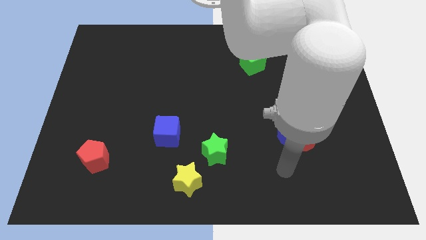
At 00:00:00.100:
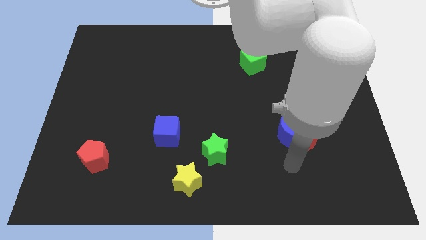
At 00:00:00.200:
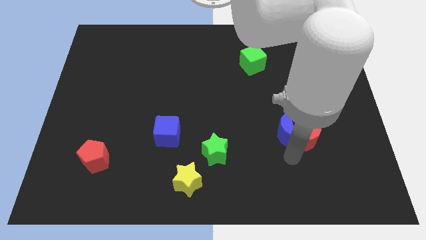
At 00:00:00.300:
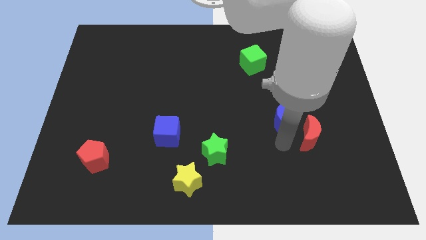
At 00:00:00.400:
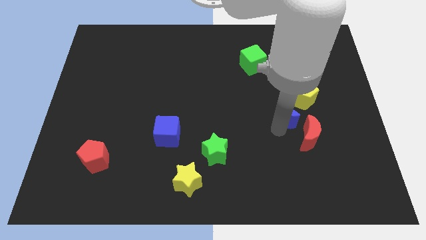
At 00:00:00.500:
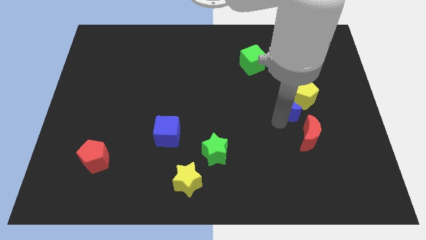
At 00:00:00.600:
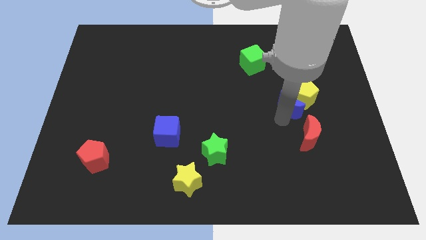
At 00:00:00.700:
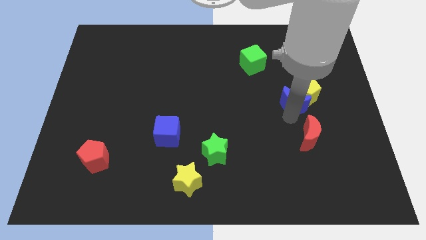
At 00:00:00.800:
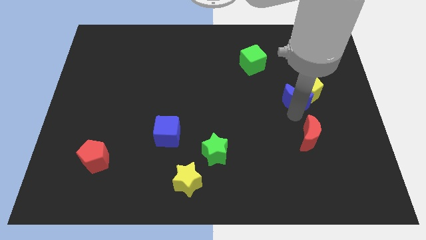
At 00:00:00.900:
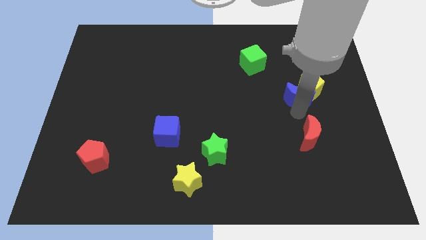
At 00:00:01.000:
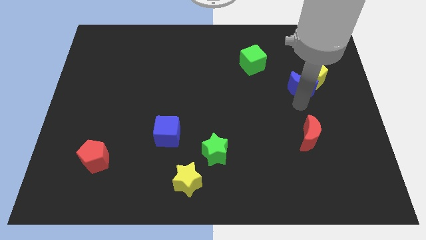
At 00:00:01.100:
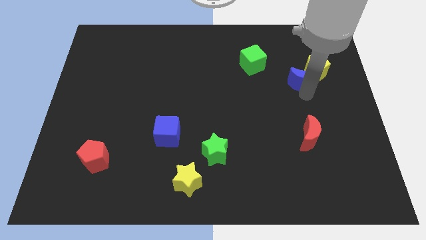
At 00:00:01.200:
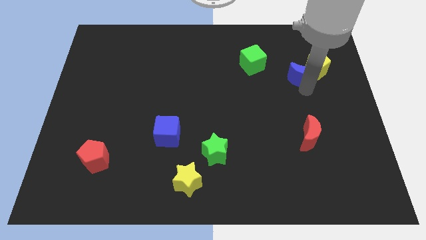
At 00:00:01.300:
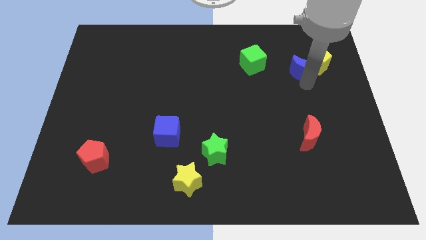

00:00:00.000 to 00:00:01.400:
push the blue crescent into the yellow pentagon

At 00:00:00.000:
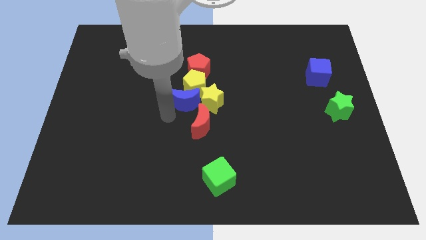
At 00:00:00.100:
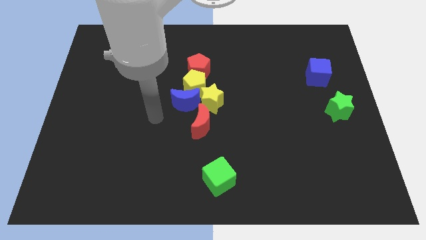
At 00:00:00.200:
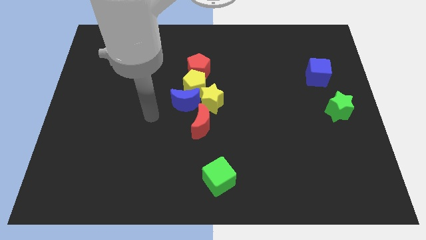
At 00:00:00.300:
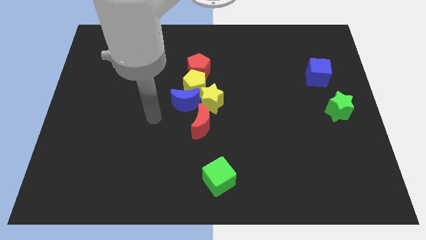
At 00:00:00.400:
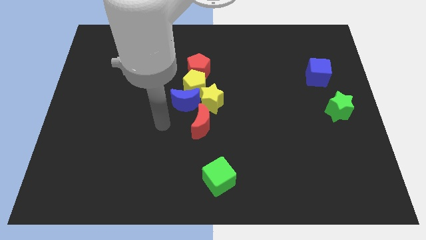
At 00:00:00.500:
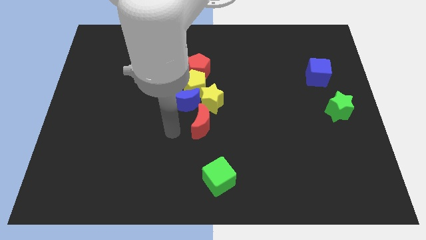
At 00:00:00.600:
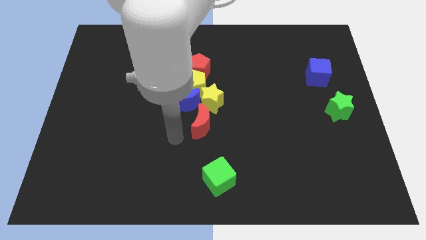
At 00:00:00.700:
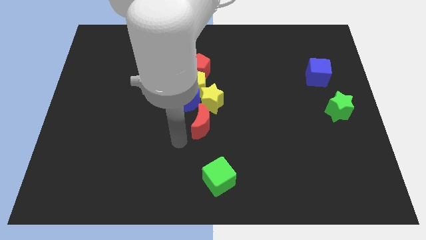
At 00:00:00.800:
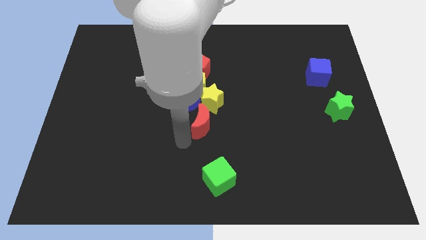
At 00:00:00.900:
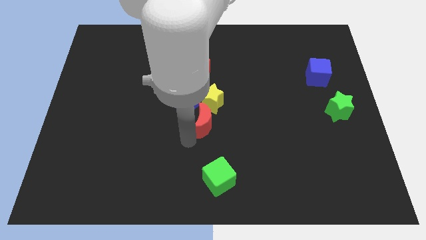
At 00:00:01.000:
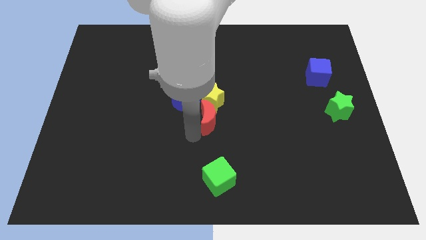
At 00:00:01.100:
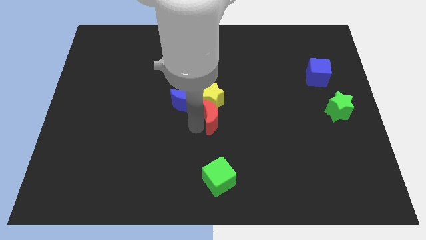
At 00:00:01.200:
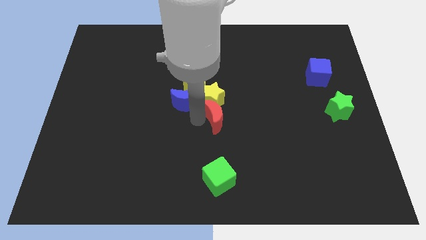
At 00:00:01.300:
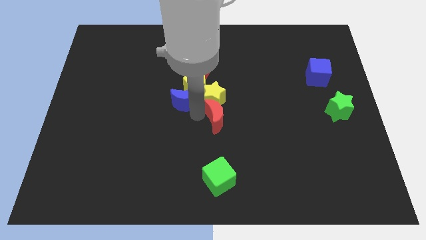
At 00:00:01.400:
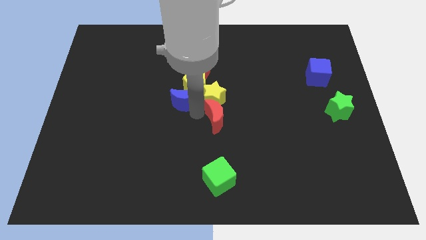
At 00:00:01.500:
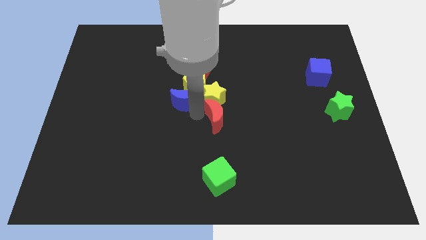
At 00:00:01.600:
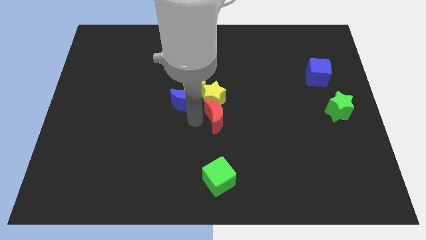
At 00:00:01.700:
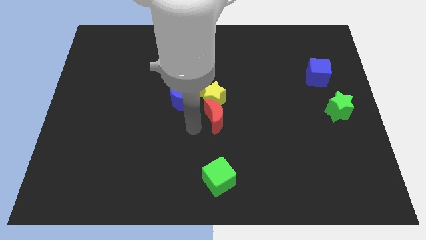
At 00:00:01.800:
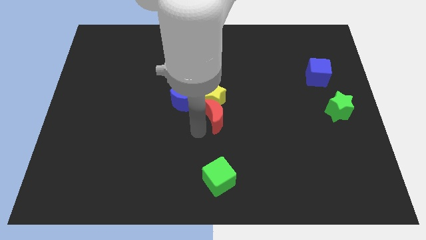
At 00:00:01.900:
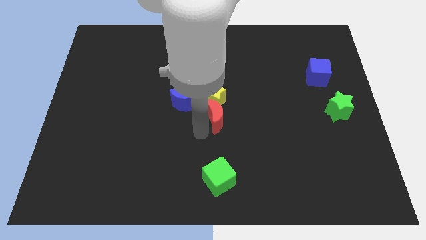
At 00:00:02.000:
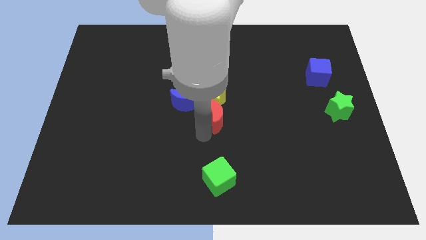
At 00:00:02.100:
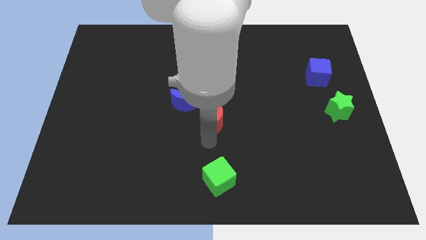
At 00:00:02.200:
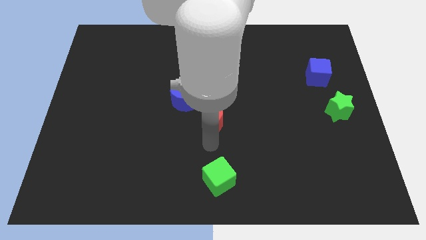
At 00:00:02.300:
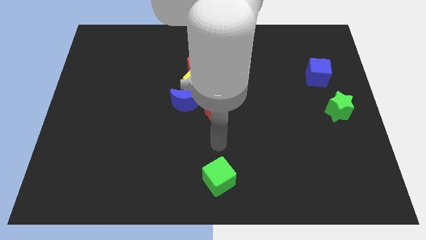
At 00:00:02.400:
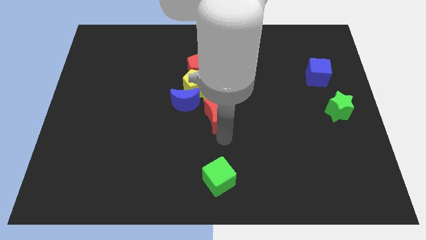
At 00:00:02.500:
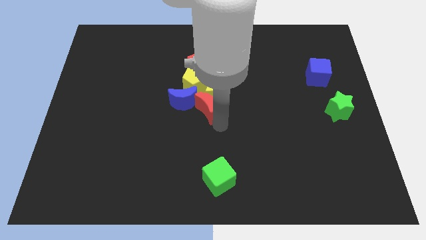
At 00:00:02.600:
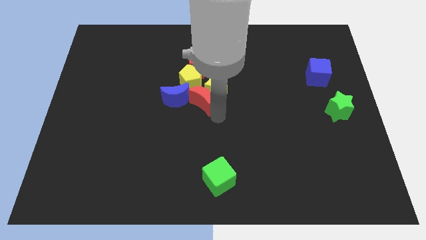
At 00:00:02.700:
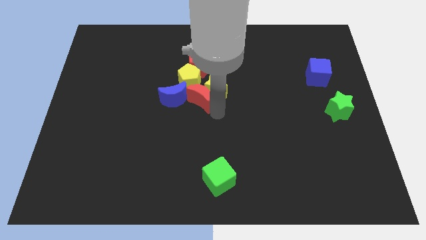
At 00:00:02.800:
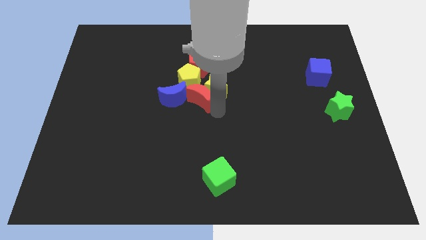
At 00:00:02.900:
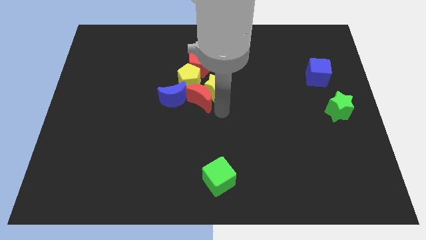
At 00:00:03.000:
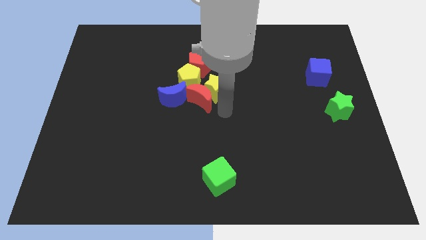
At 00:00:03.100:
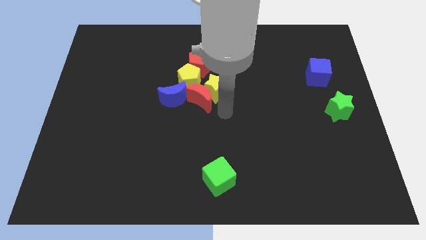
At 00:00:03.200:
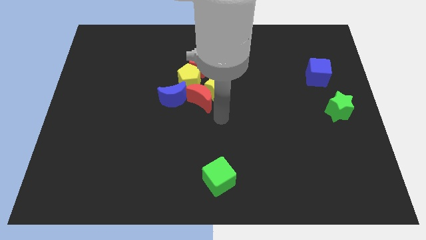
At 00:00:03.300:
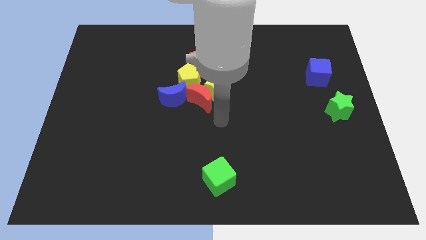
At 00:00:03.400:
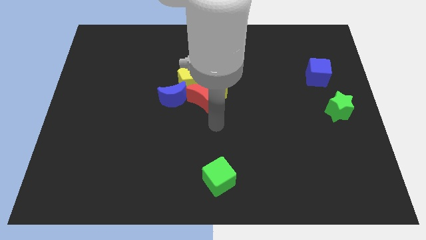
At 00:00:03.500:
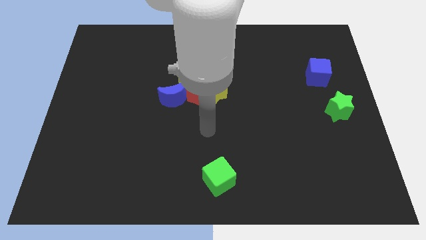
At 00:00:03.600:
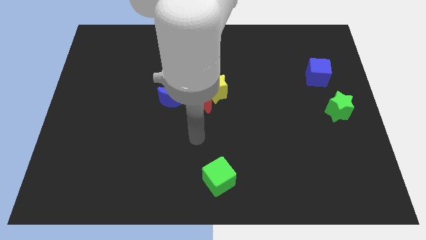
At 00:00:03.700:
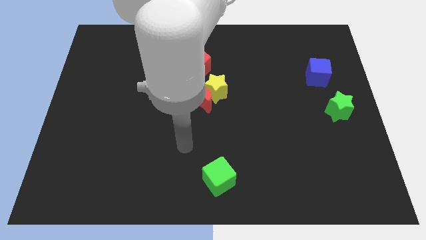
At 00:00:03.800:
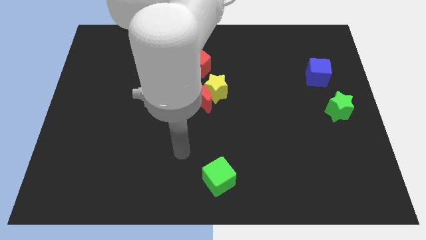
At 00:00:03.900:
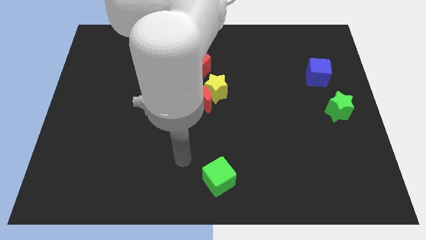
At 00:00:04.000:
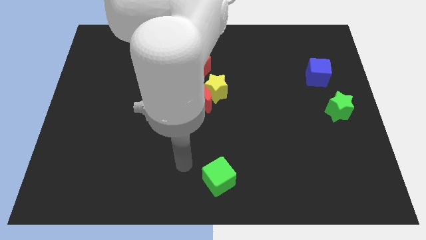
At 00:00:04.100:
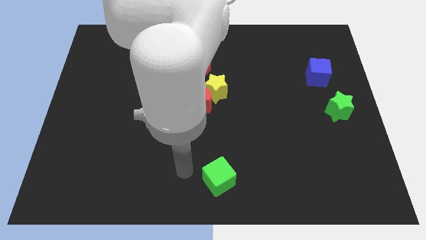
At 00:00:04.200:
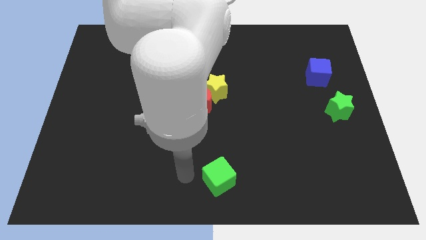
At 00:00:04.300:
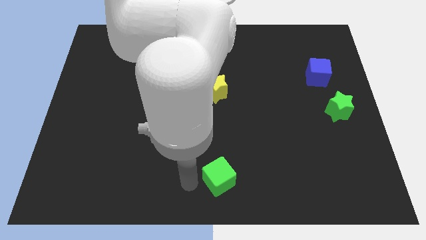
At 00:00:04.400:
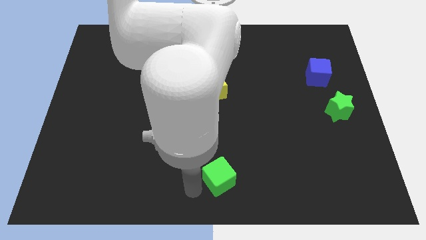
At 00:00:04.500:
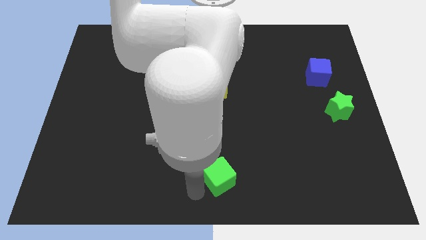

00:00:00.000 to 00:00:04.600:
move the red crescent between the yellow star and blue crescent

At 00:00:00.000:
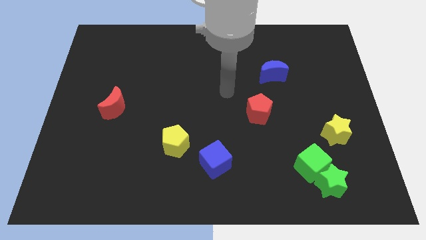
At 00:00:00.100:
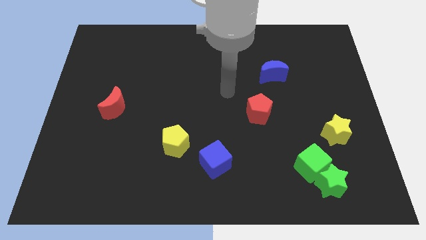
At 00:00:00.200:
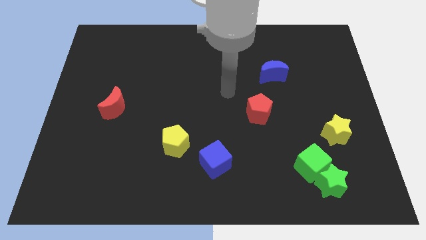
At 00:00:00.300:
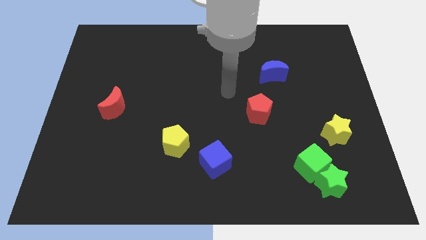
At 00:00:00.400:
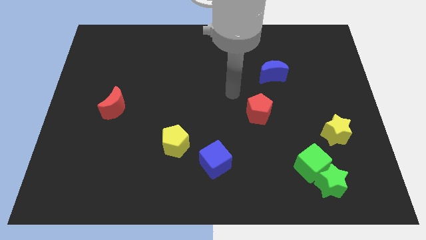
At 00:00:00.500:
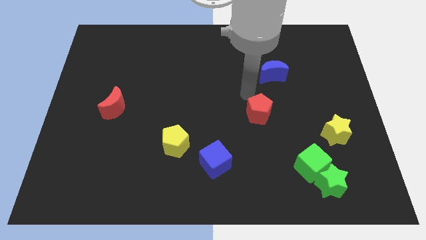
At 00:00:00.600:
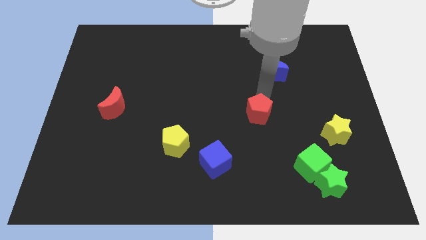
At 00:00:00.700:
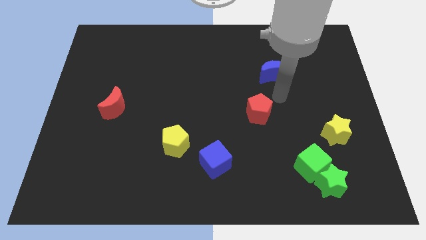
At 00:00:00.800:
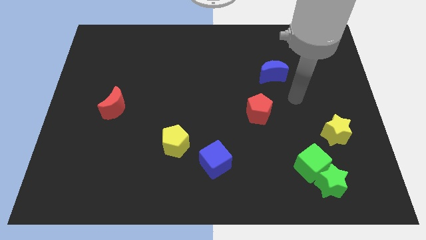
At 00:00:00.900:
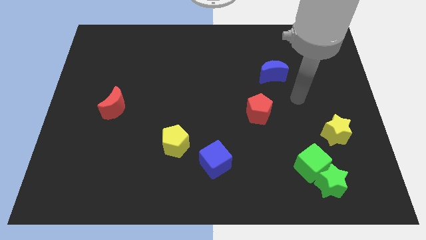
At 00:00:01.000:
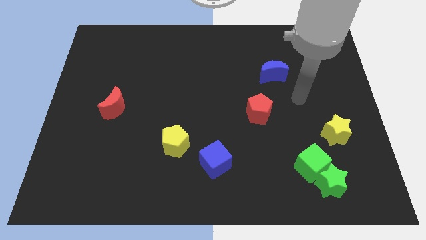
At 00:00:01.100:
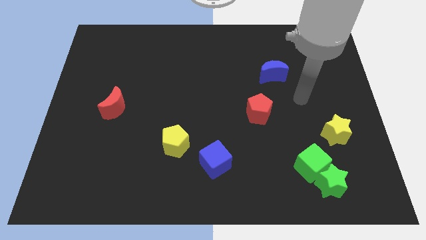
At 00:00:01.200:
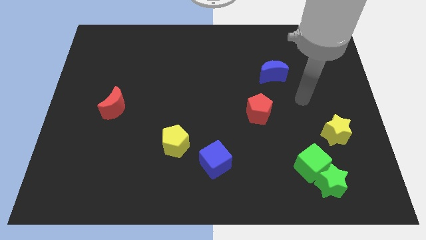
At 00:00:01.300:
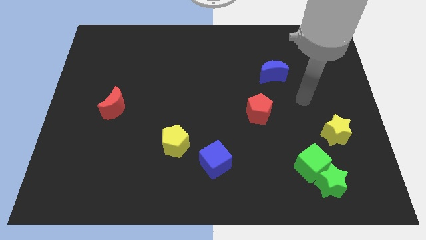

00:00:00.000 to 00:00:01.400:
move your hand towards the right side

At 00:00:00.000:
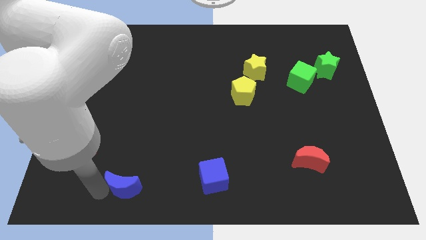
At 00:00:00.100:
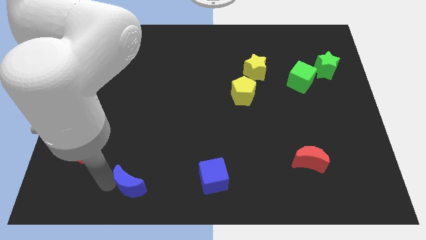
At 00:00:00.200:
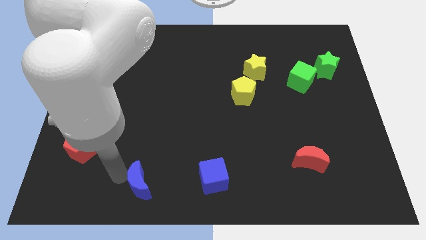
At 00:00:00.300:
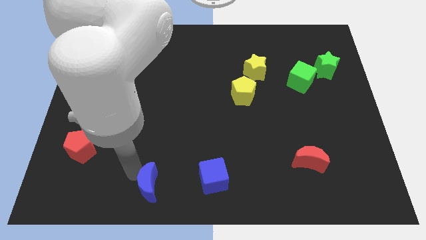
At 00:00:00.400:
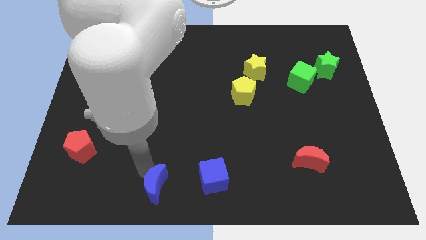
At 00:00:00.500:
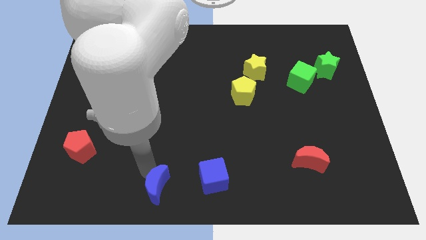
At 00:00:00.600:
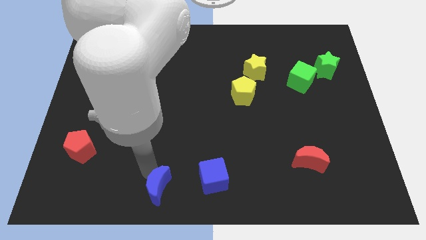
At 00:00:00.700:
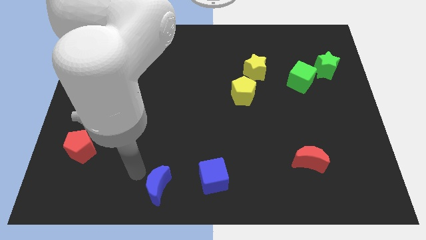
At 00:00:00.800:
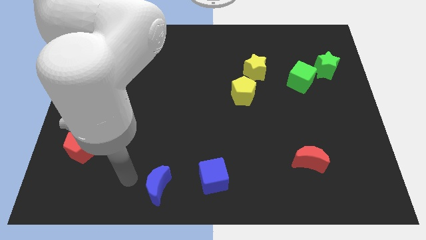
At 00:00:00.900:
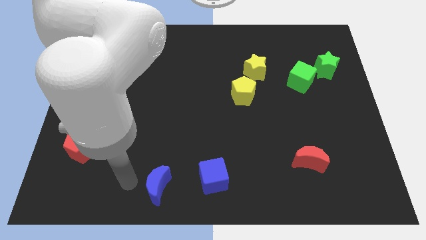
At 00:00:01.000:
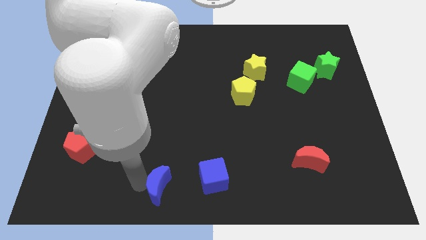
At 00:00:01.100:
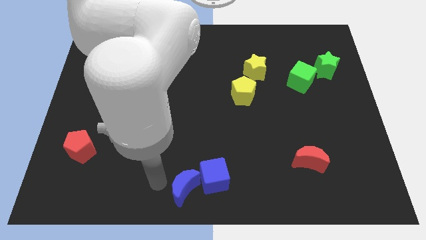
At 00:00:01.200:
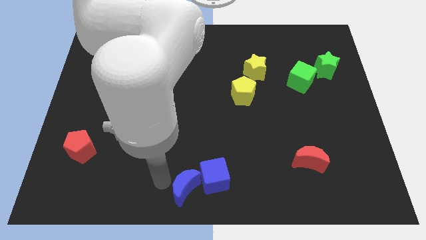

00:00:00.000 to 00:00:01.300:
move the blue moon into the blue cube

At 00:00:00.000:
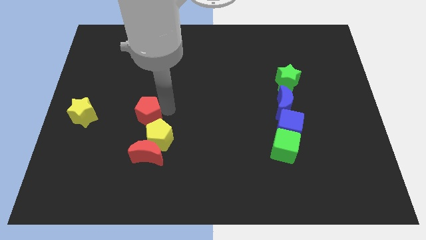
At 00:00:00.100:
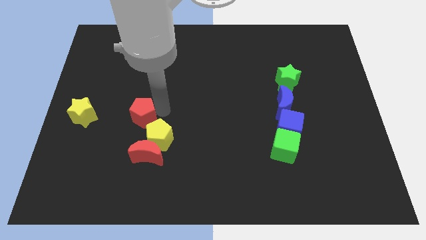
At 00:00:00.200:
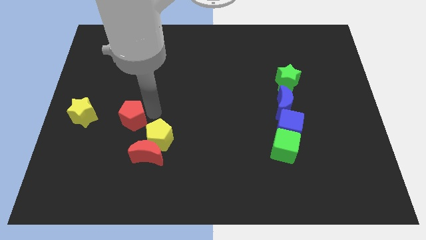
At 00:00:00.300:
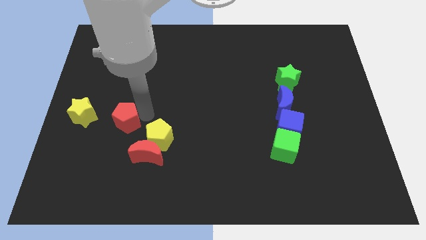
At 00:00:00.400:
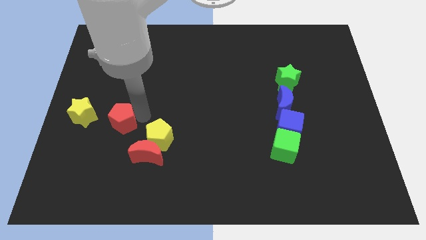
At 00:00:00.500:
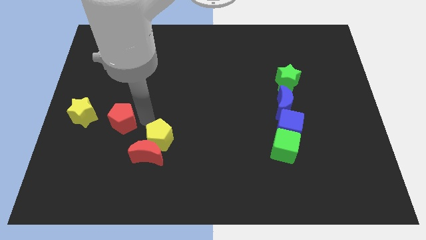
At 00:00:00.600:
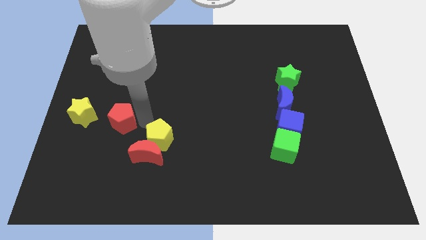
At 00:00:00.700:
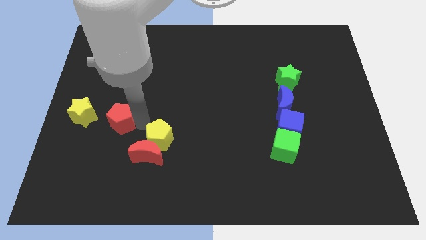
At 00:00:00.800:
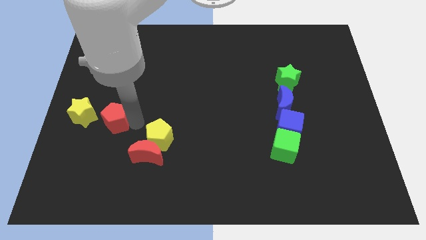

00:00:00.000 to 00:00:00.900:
separate the red pentagon from the yellow pentagon
